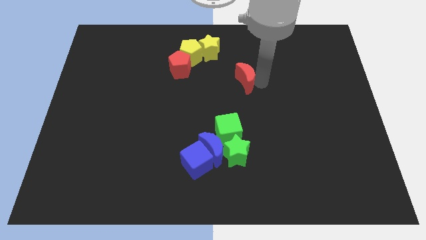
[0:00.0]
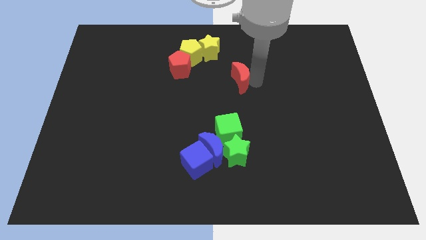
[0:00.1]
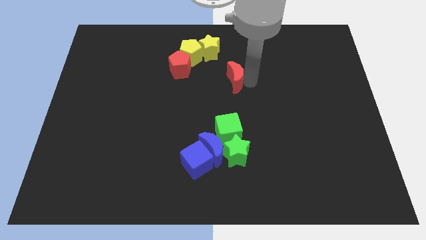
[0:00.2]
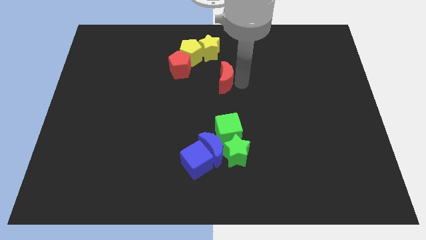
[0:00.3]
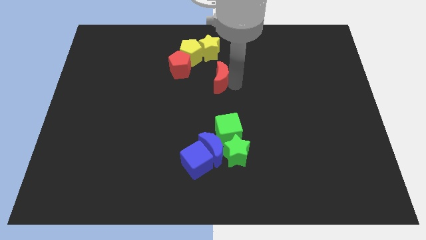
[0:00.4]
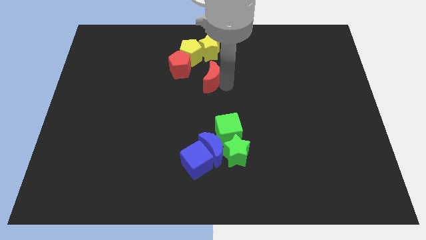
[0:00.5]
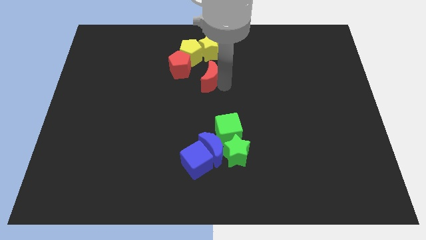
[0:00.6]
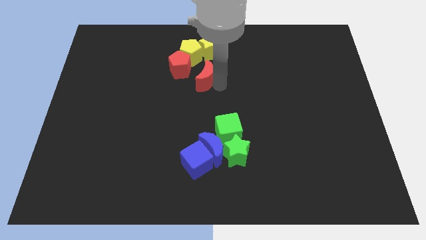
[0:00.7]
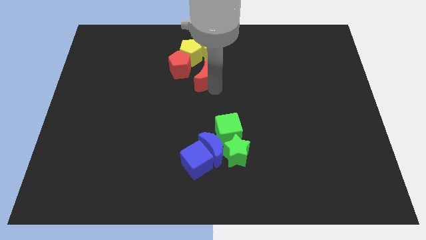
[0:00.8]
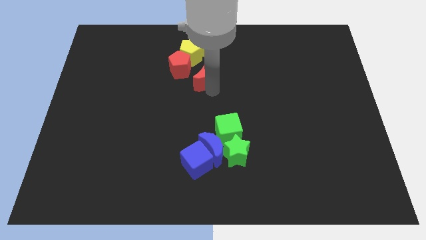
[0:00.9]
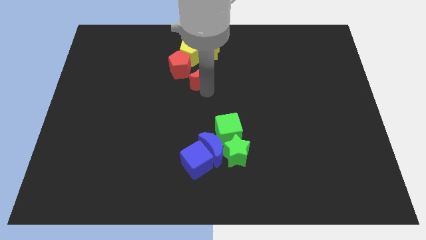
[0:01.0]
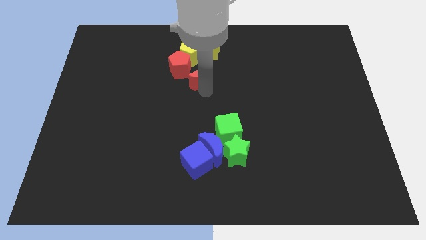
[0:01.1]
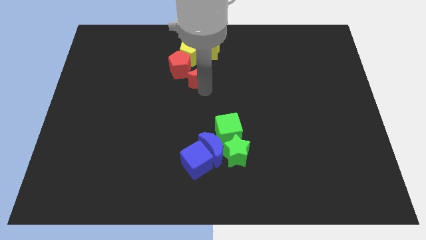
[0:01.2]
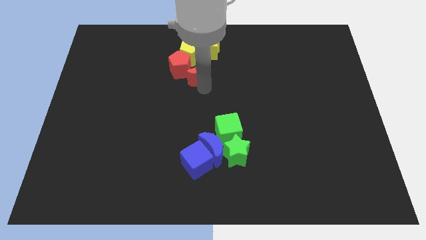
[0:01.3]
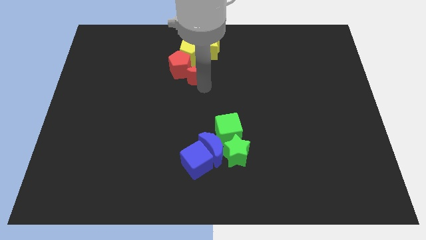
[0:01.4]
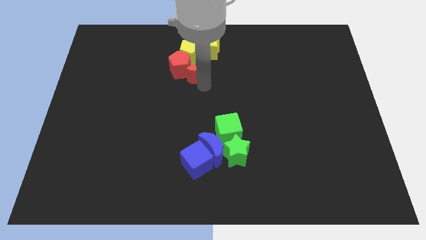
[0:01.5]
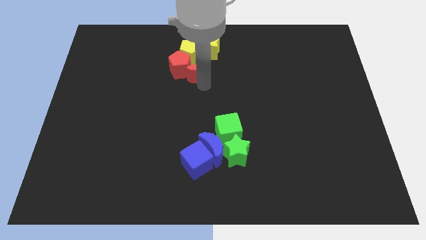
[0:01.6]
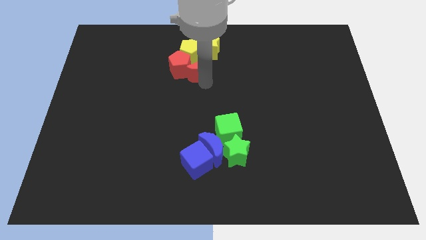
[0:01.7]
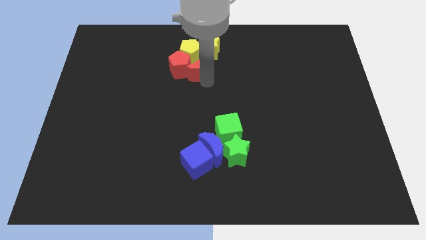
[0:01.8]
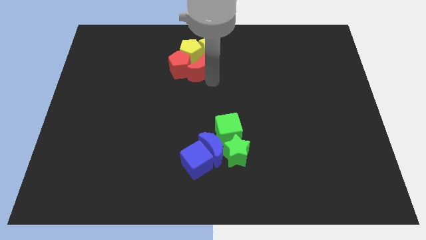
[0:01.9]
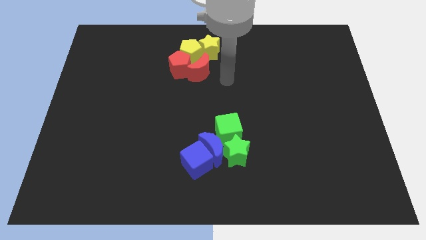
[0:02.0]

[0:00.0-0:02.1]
move the red crescent towards the right of the red pentagon

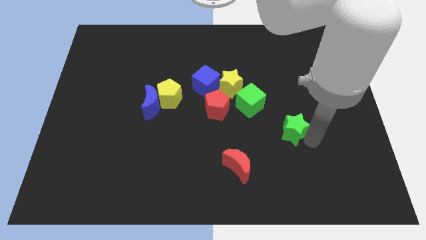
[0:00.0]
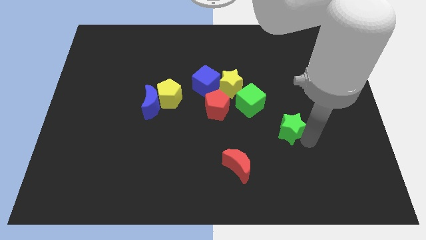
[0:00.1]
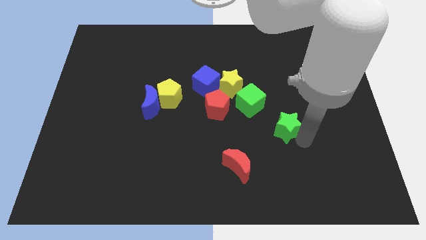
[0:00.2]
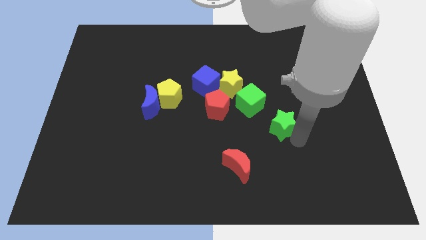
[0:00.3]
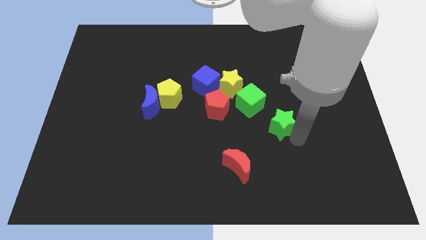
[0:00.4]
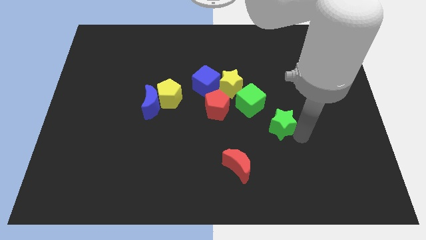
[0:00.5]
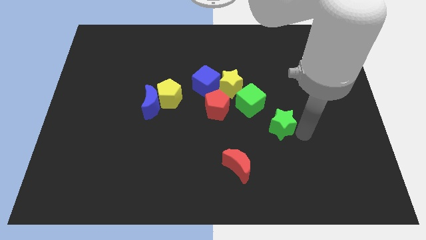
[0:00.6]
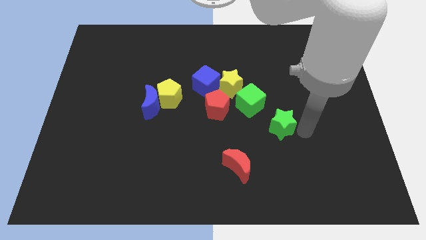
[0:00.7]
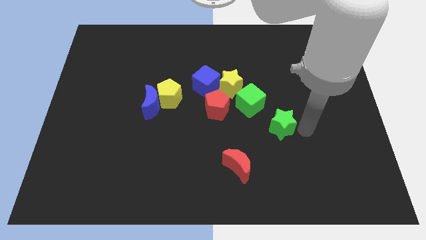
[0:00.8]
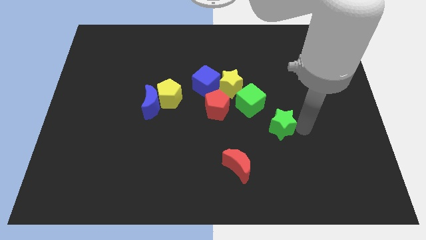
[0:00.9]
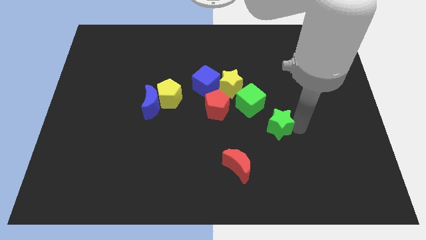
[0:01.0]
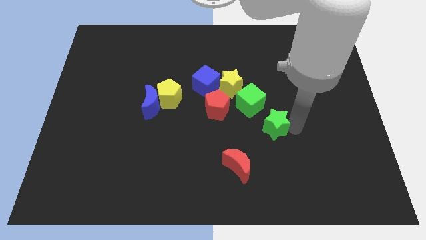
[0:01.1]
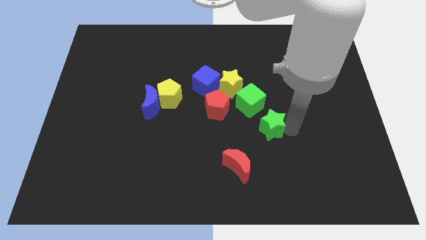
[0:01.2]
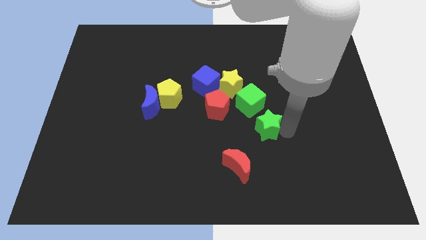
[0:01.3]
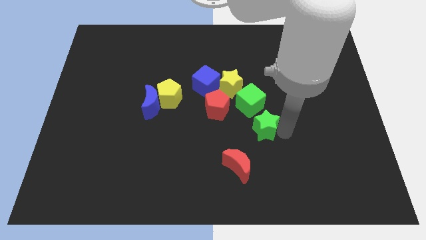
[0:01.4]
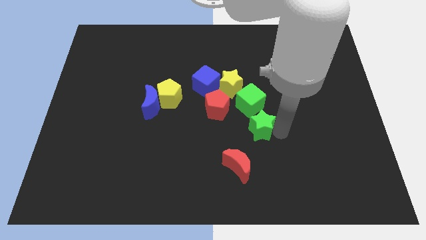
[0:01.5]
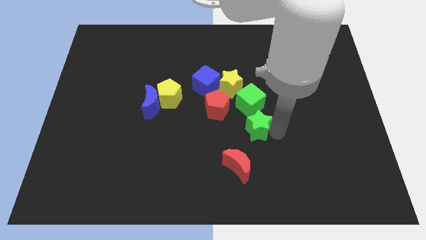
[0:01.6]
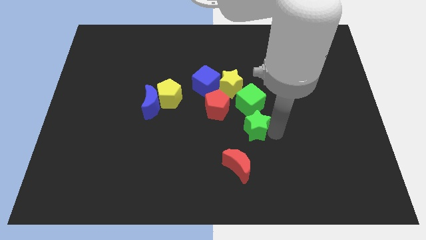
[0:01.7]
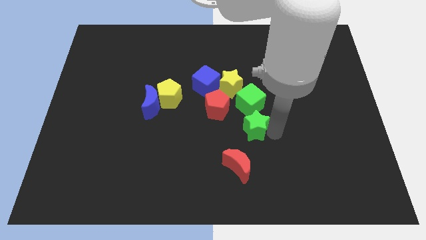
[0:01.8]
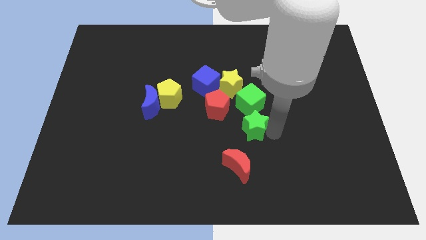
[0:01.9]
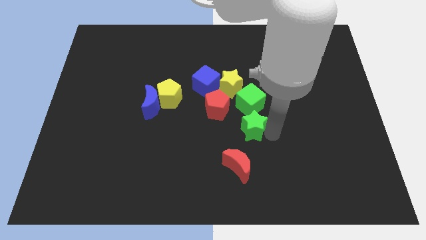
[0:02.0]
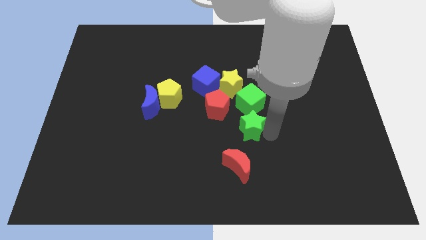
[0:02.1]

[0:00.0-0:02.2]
bring the green star near to the bottom side of the green cube

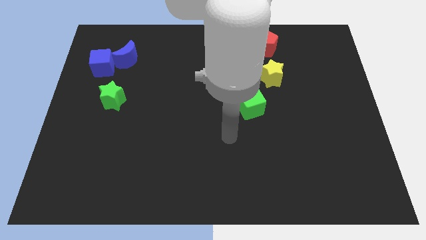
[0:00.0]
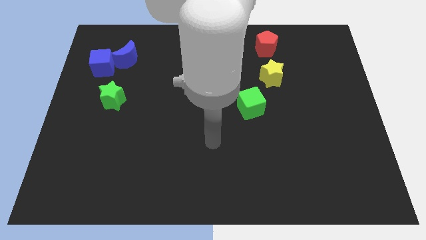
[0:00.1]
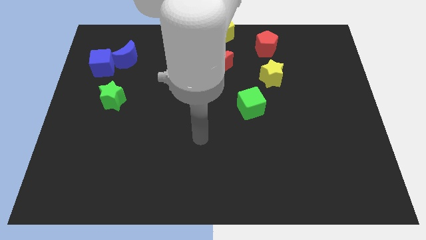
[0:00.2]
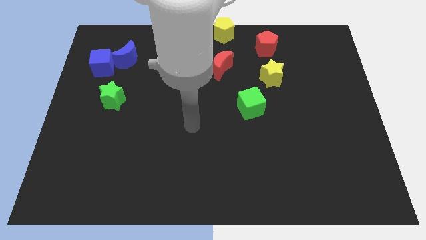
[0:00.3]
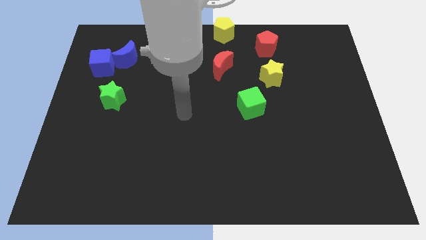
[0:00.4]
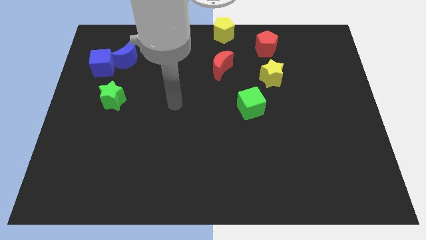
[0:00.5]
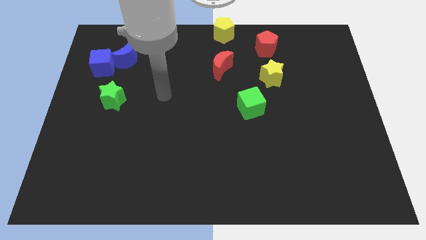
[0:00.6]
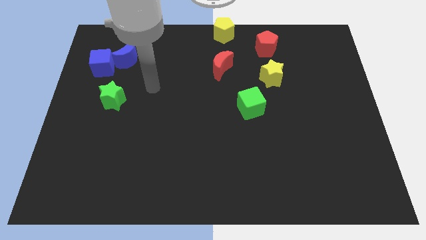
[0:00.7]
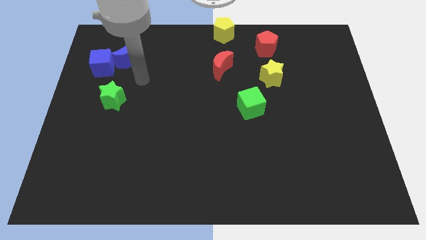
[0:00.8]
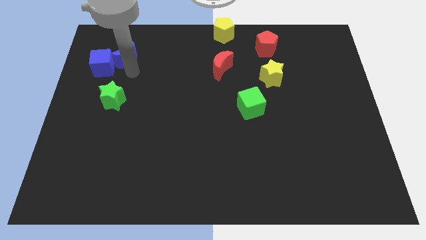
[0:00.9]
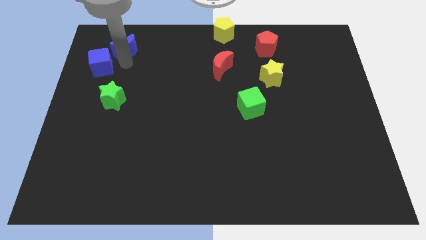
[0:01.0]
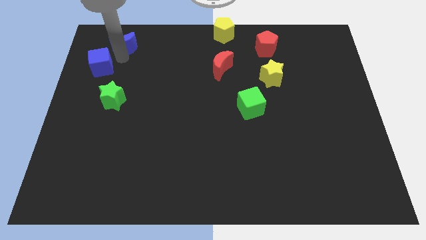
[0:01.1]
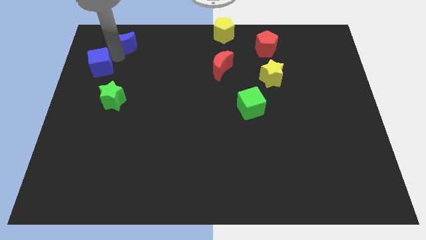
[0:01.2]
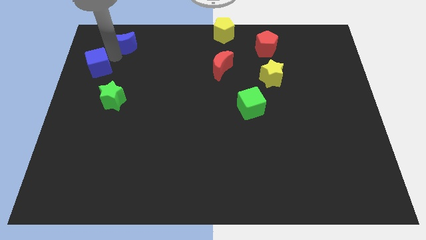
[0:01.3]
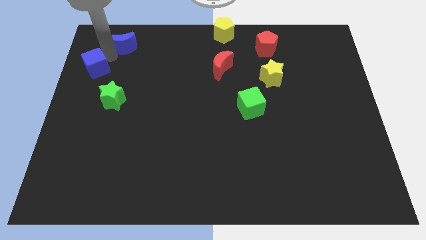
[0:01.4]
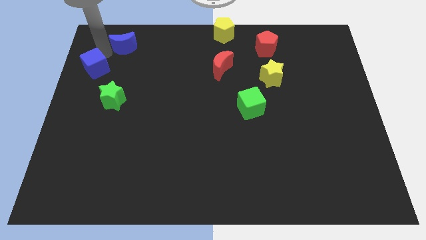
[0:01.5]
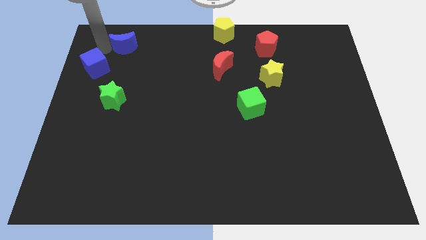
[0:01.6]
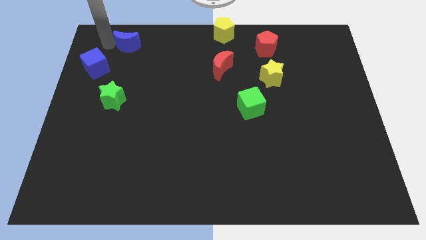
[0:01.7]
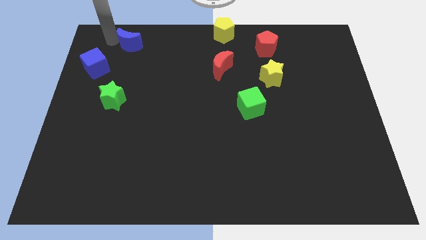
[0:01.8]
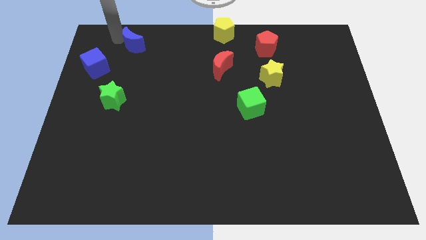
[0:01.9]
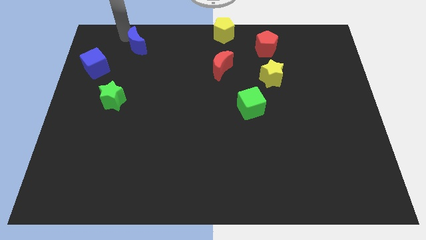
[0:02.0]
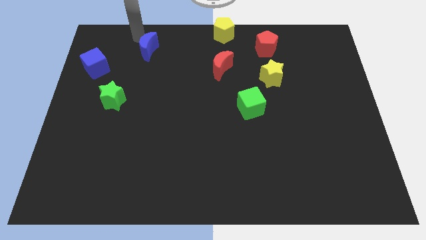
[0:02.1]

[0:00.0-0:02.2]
separate blue cube with blue crescent

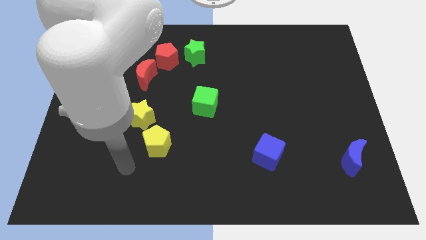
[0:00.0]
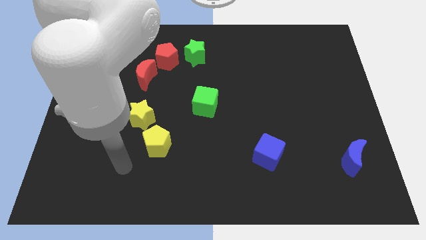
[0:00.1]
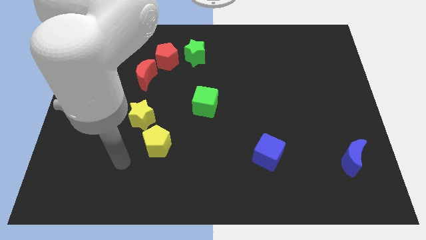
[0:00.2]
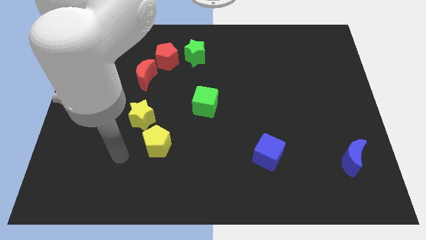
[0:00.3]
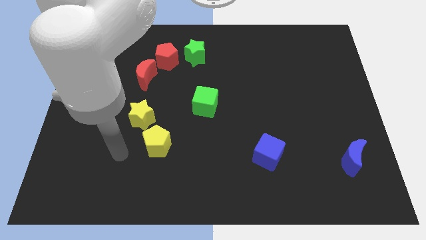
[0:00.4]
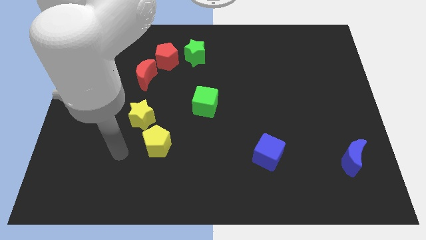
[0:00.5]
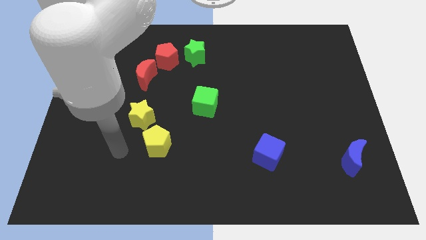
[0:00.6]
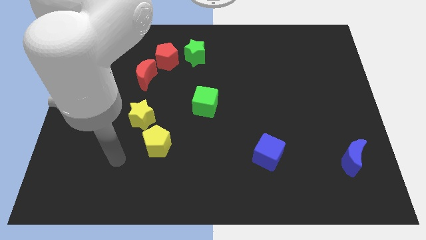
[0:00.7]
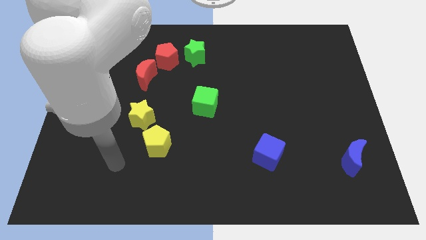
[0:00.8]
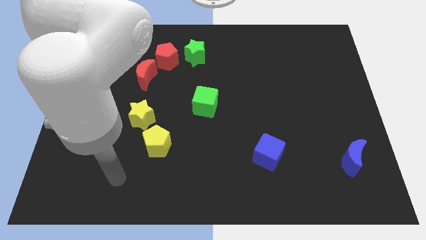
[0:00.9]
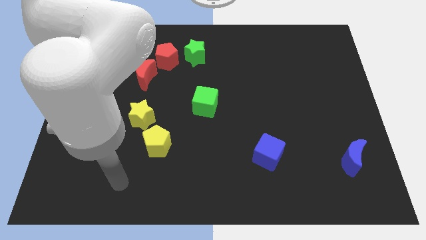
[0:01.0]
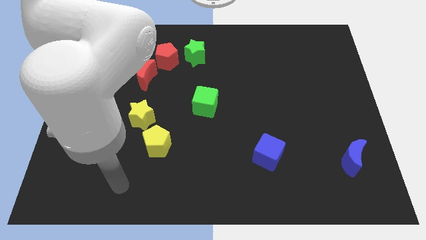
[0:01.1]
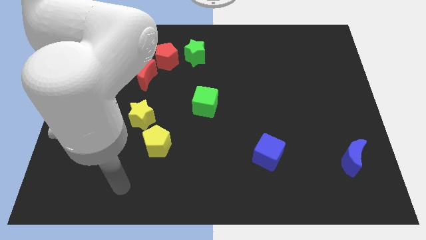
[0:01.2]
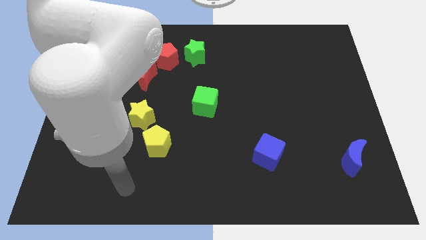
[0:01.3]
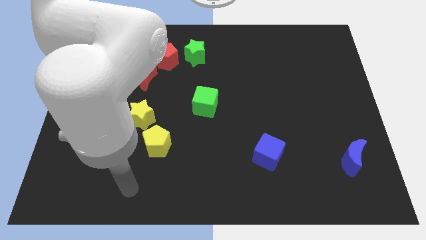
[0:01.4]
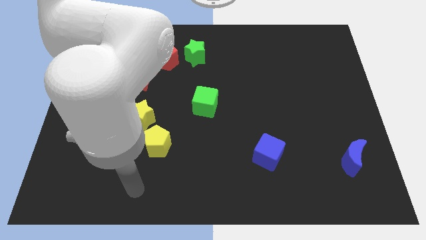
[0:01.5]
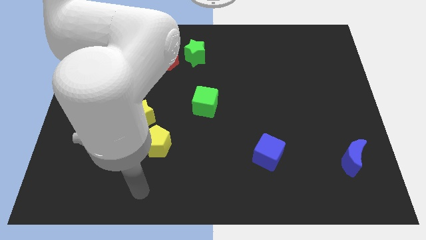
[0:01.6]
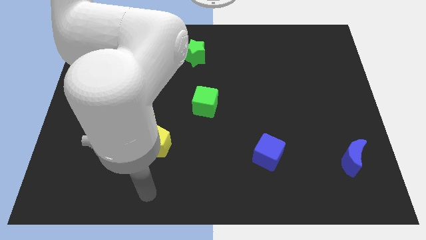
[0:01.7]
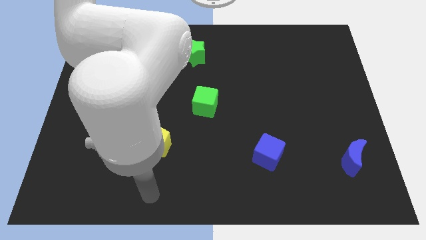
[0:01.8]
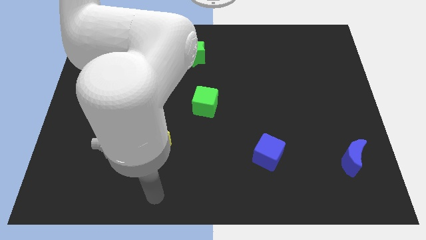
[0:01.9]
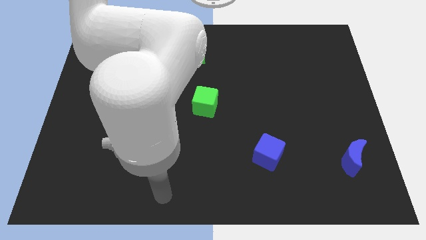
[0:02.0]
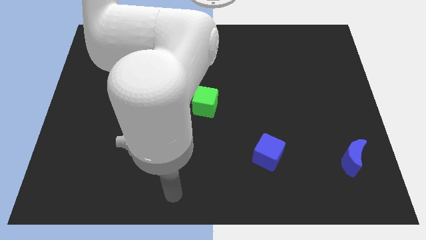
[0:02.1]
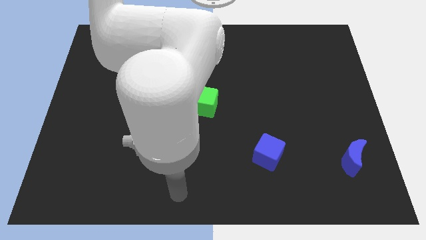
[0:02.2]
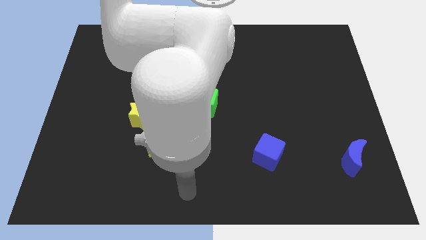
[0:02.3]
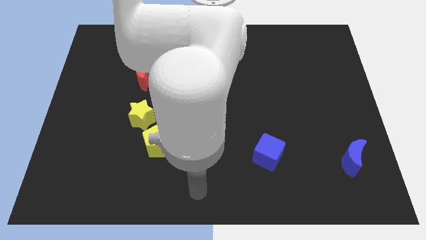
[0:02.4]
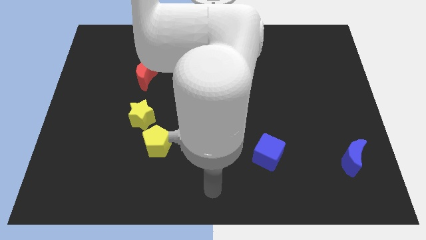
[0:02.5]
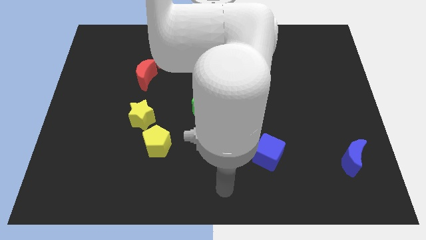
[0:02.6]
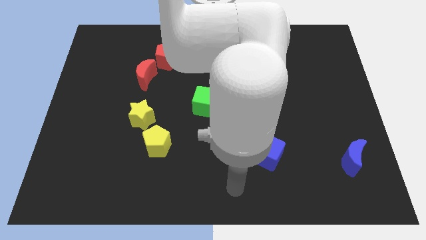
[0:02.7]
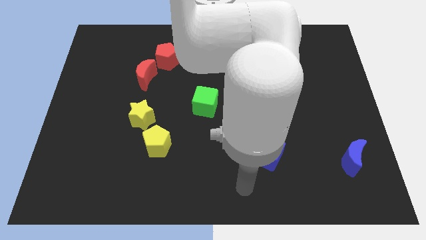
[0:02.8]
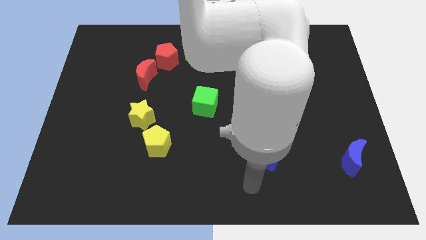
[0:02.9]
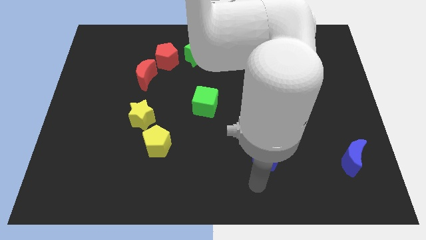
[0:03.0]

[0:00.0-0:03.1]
move your arm and point below the blue cube
